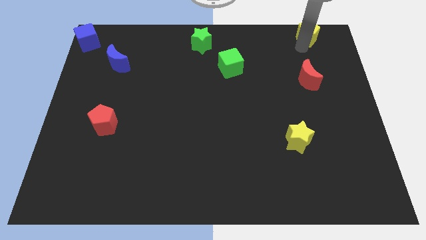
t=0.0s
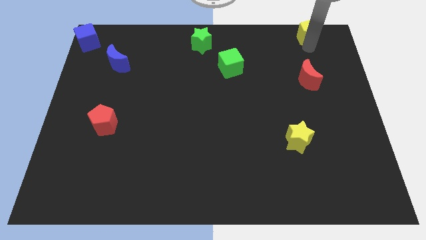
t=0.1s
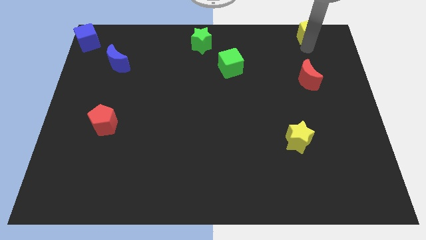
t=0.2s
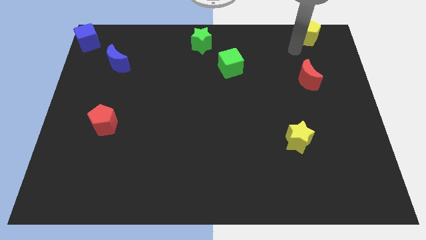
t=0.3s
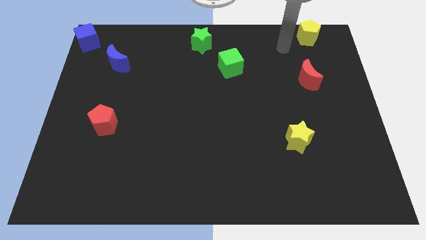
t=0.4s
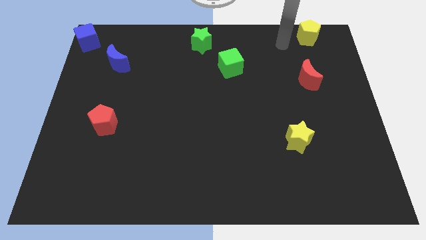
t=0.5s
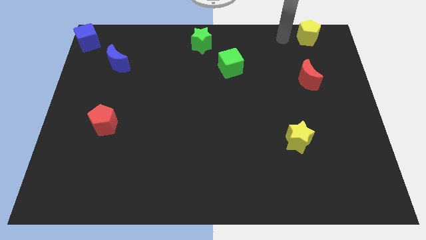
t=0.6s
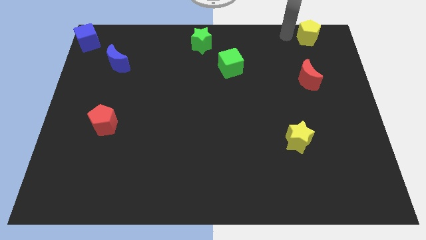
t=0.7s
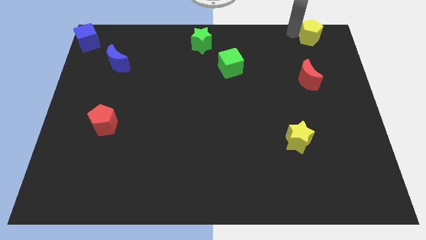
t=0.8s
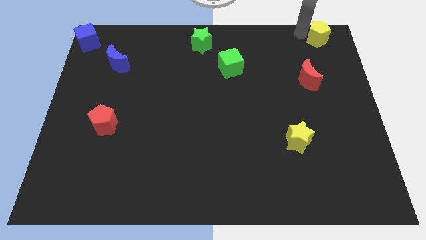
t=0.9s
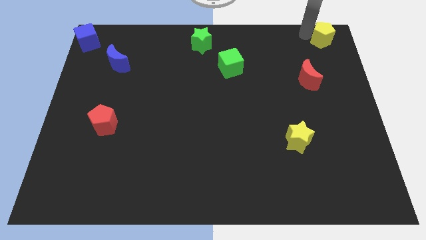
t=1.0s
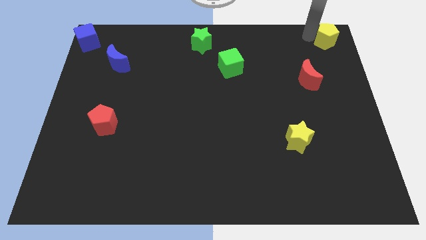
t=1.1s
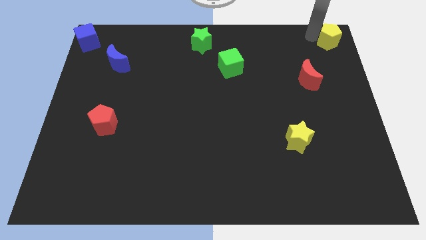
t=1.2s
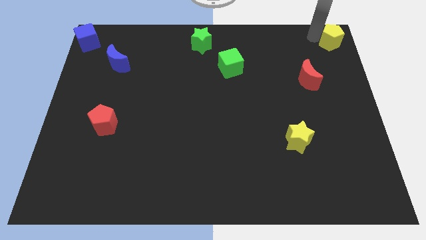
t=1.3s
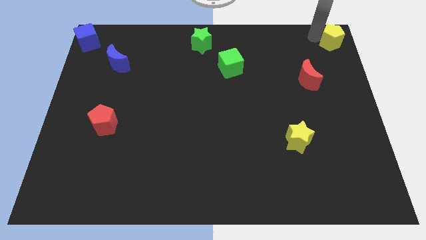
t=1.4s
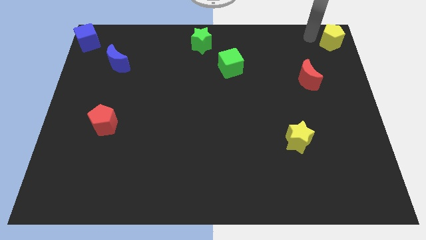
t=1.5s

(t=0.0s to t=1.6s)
place the yellow pentagon at the top right corner

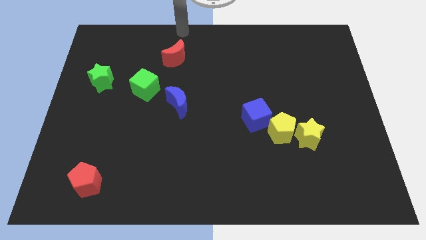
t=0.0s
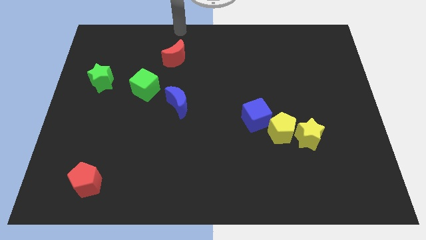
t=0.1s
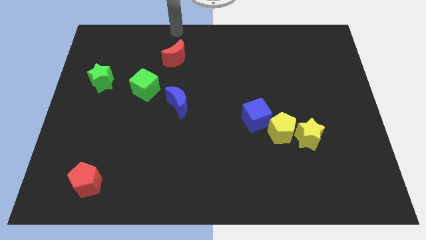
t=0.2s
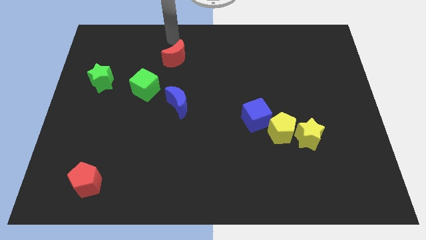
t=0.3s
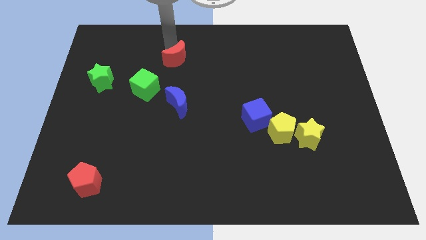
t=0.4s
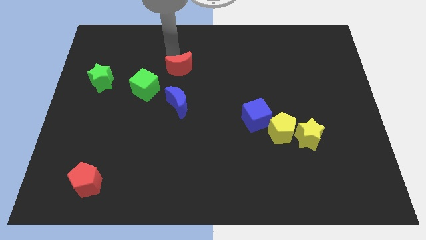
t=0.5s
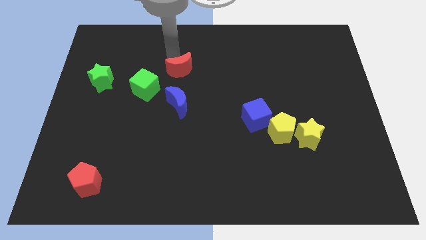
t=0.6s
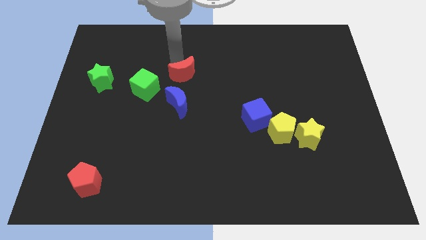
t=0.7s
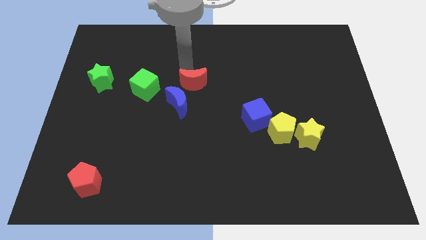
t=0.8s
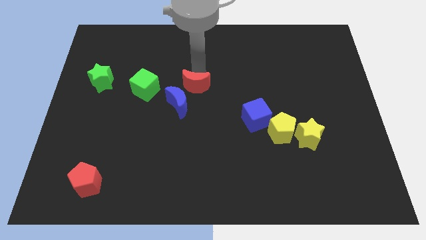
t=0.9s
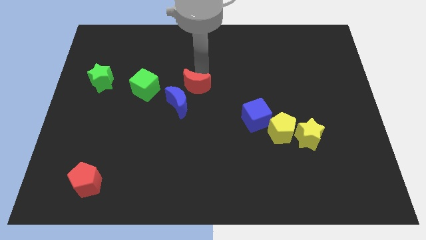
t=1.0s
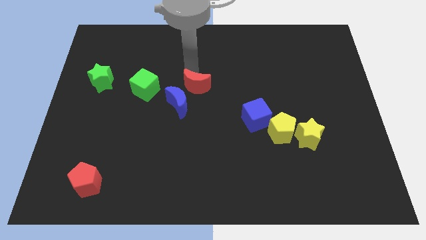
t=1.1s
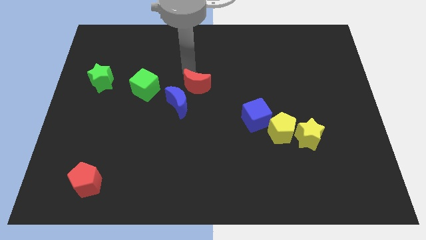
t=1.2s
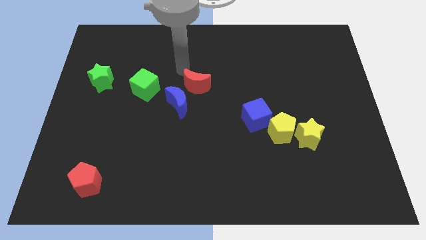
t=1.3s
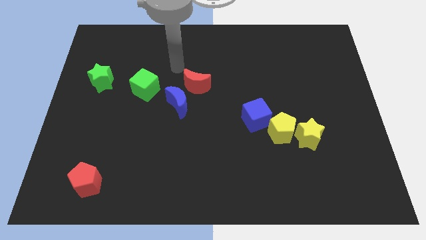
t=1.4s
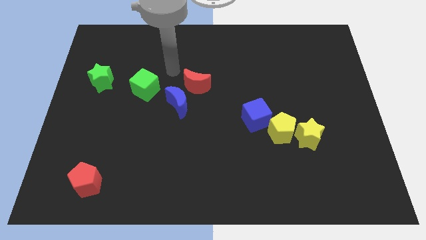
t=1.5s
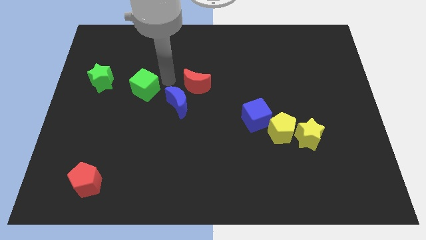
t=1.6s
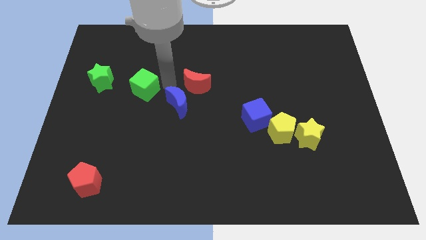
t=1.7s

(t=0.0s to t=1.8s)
place the red moon to the right of the green cube

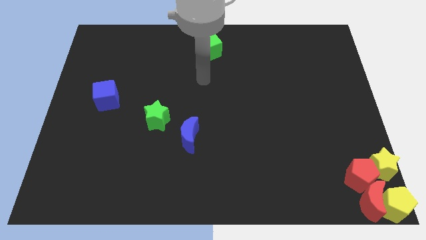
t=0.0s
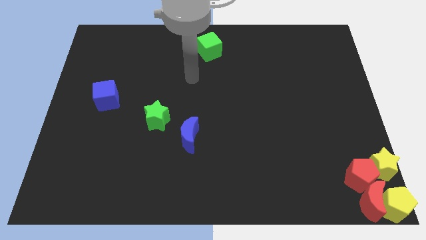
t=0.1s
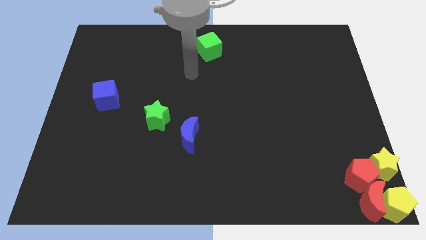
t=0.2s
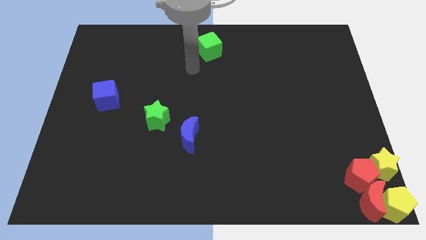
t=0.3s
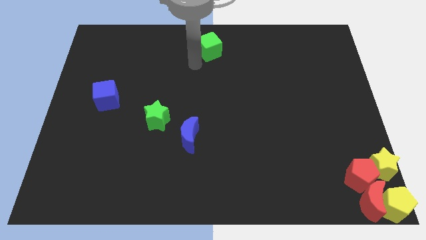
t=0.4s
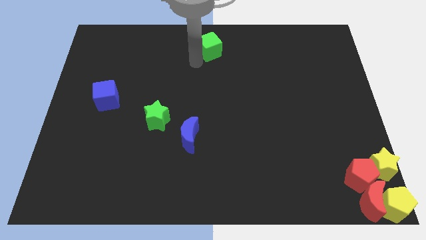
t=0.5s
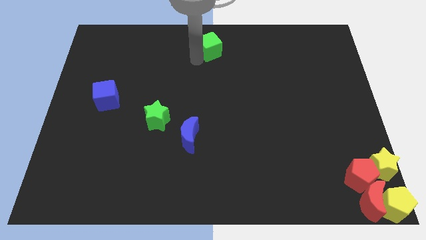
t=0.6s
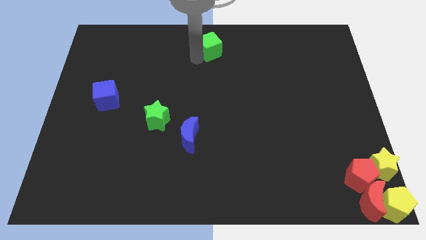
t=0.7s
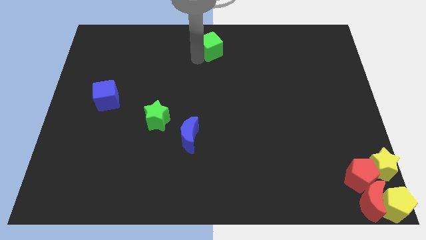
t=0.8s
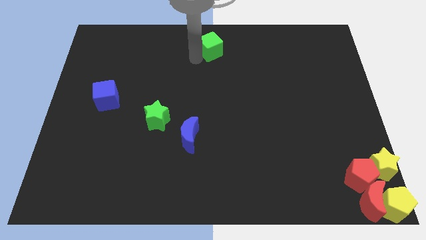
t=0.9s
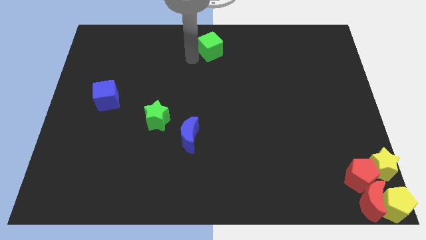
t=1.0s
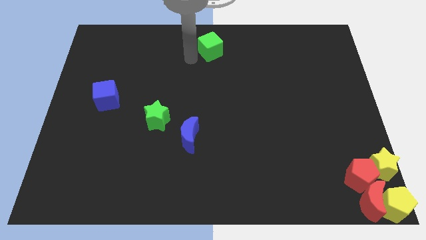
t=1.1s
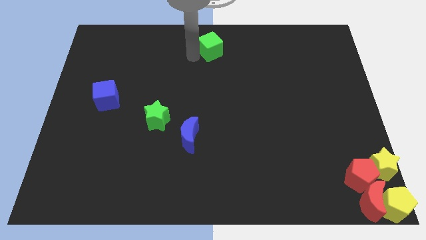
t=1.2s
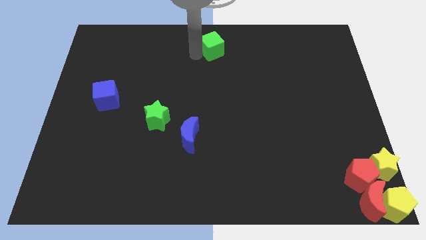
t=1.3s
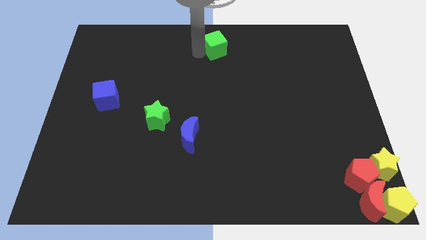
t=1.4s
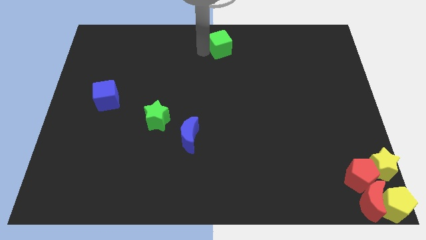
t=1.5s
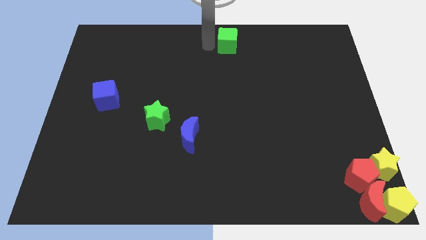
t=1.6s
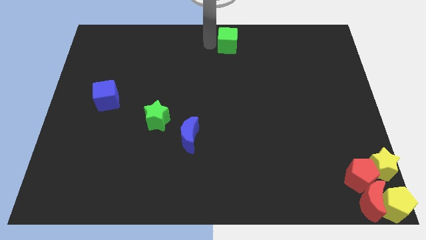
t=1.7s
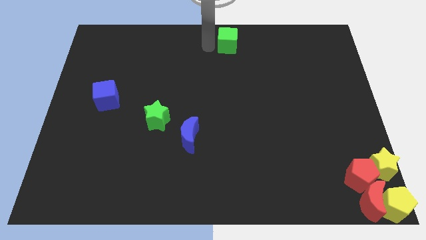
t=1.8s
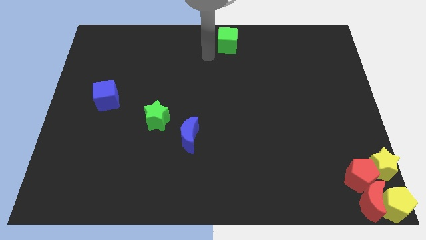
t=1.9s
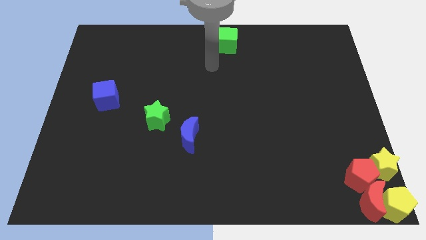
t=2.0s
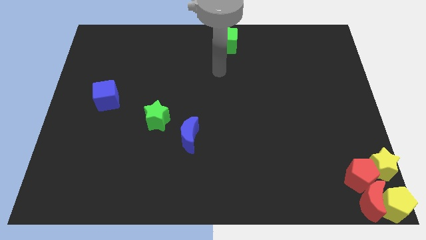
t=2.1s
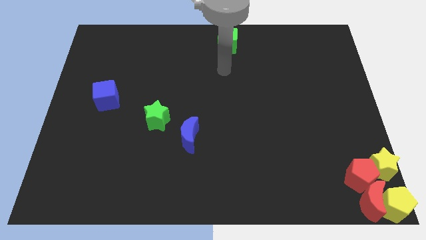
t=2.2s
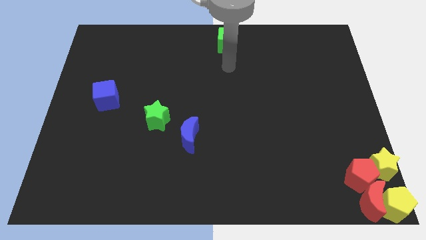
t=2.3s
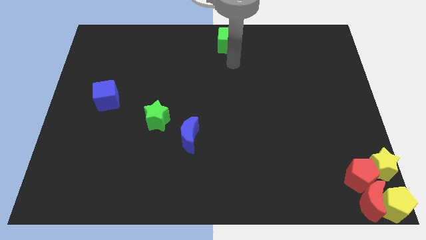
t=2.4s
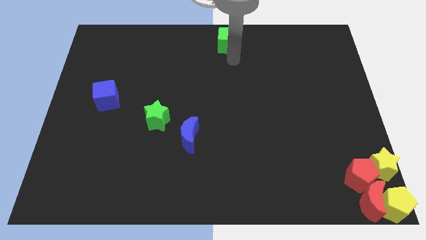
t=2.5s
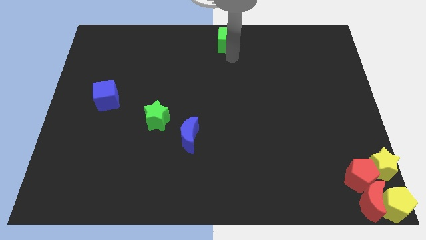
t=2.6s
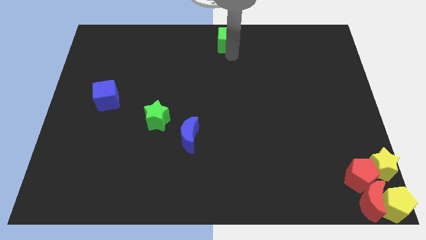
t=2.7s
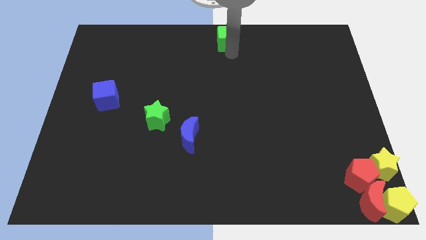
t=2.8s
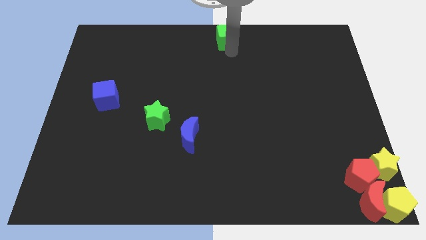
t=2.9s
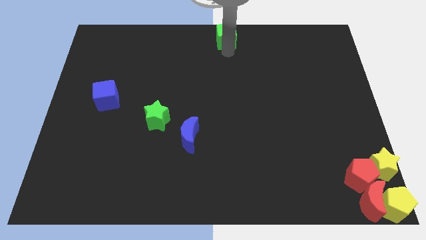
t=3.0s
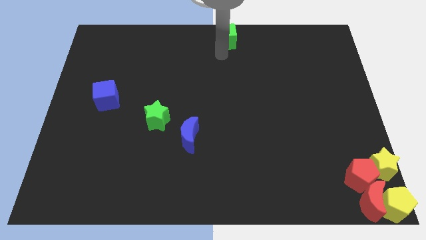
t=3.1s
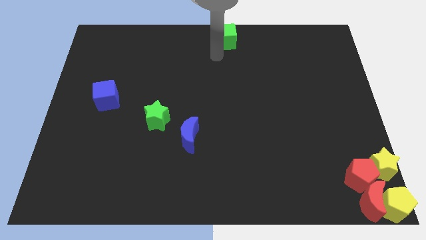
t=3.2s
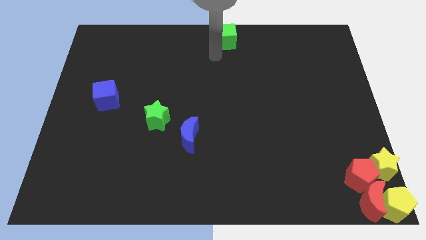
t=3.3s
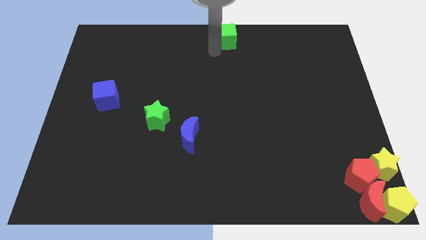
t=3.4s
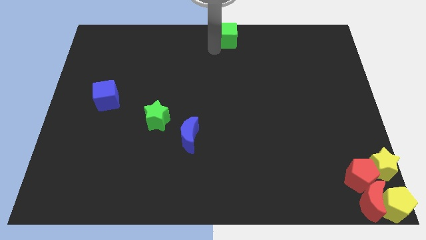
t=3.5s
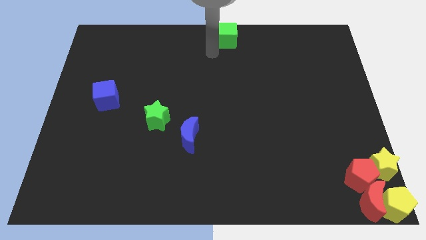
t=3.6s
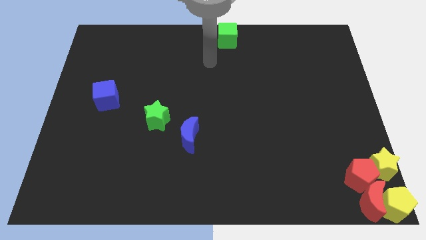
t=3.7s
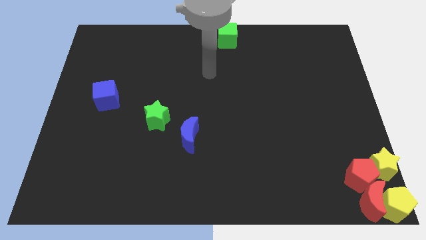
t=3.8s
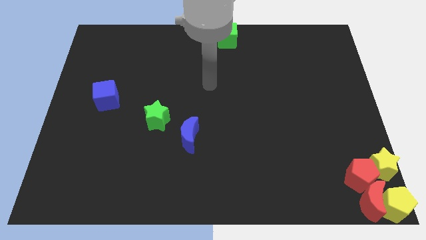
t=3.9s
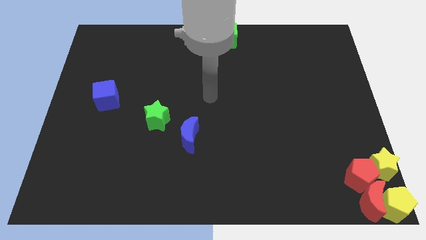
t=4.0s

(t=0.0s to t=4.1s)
slightly adjust the green cube to the top center line

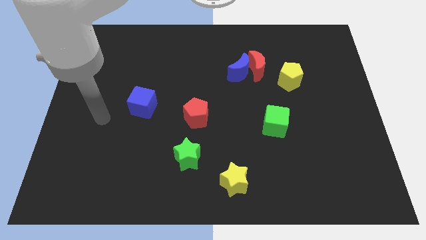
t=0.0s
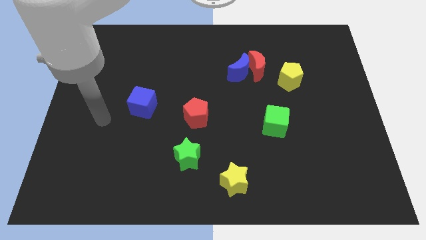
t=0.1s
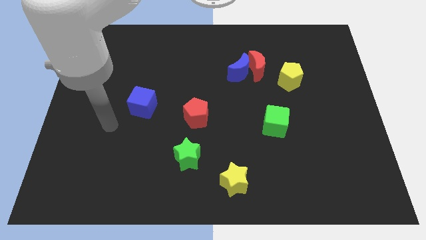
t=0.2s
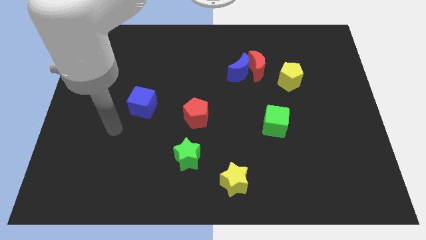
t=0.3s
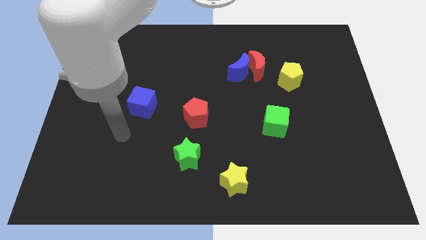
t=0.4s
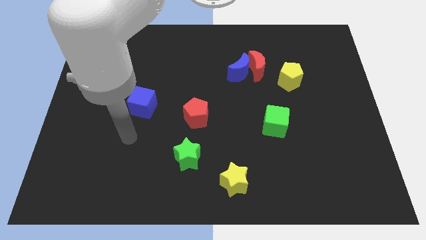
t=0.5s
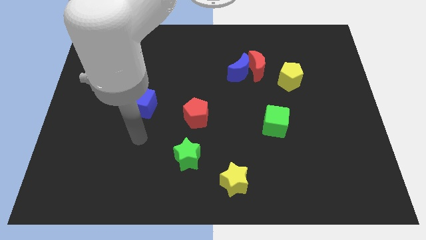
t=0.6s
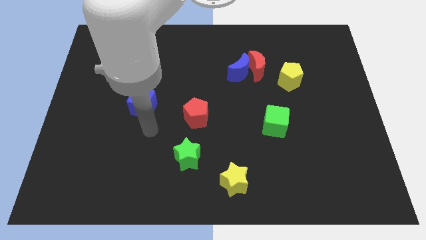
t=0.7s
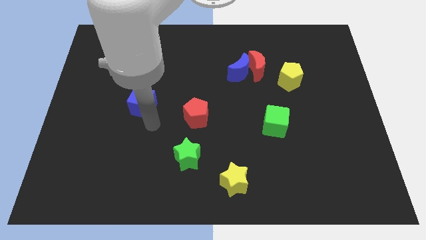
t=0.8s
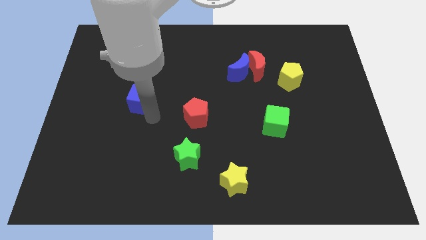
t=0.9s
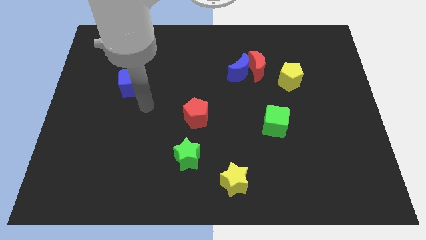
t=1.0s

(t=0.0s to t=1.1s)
push the blue cube towards the top side of the board

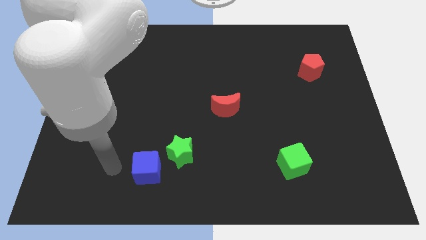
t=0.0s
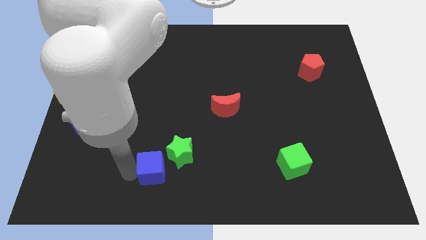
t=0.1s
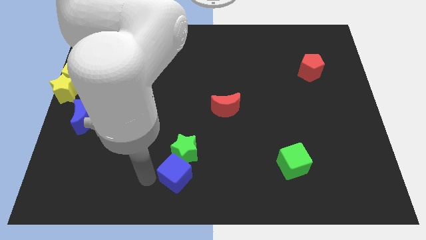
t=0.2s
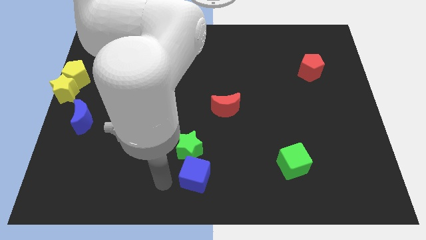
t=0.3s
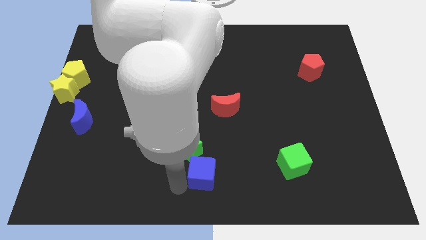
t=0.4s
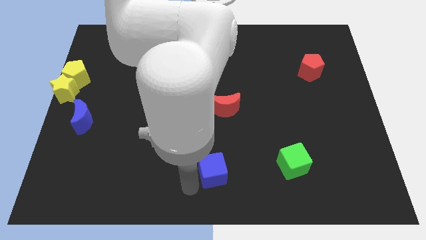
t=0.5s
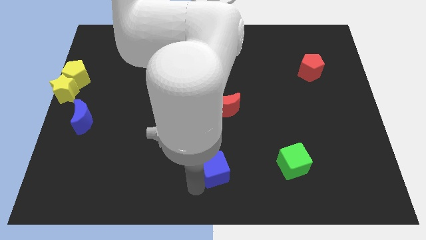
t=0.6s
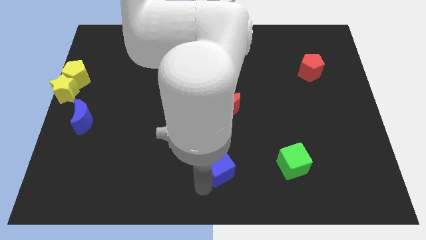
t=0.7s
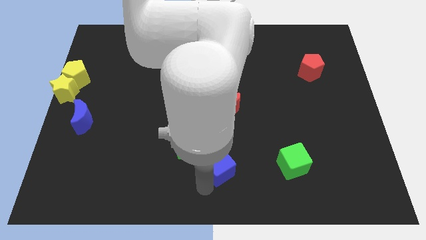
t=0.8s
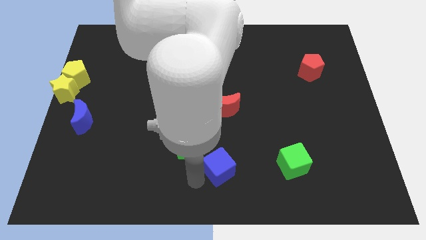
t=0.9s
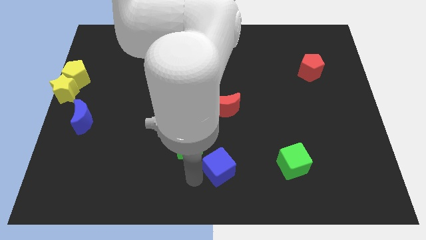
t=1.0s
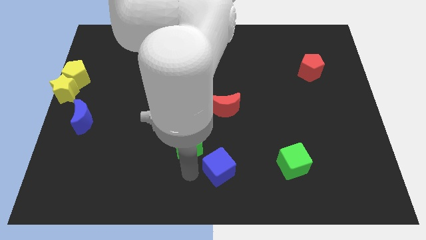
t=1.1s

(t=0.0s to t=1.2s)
move the blue cube diagonally bottom right to green star
